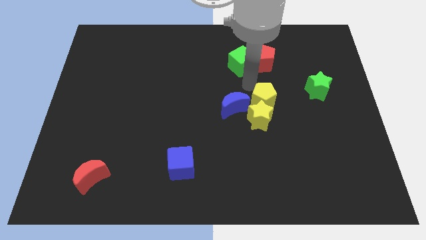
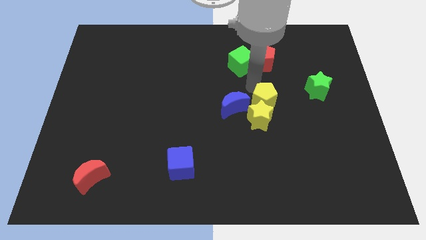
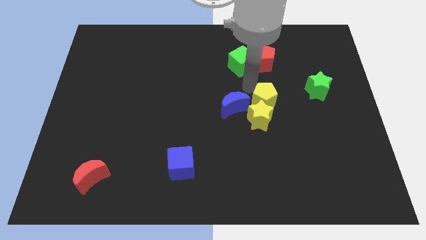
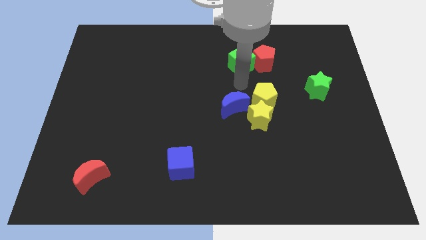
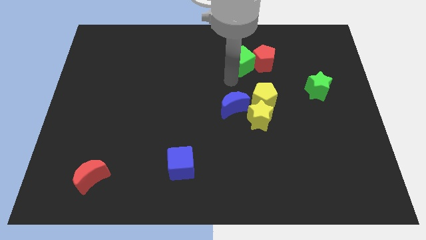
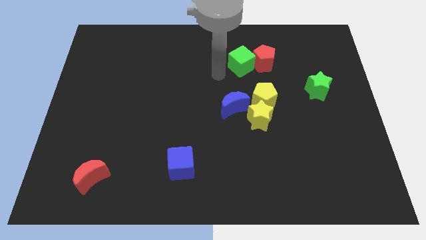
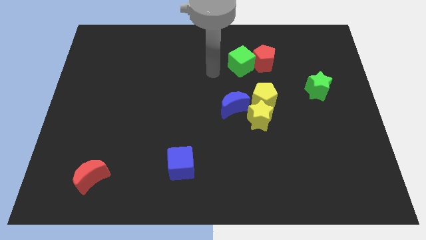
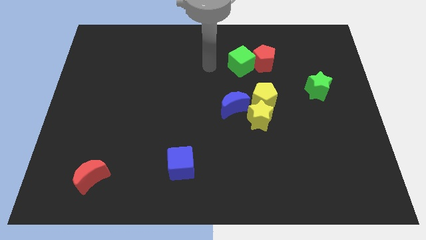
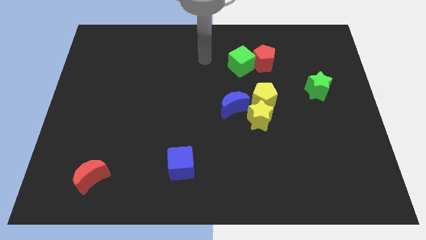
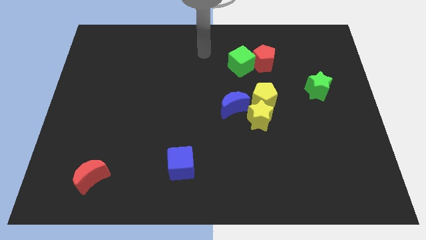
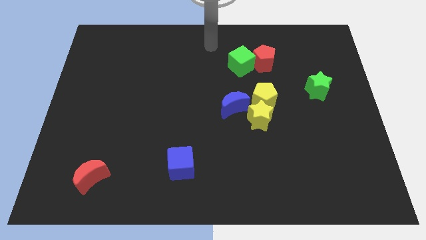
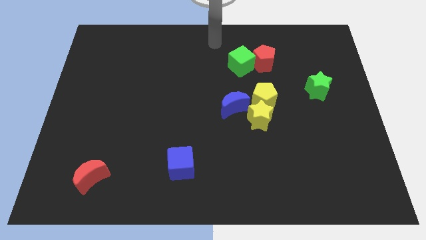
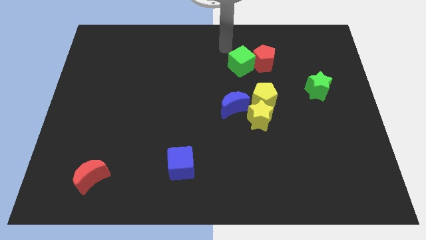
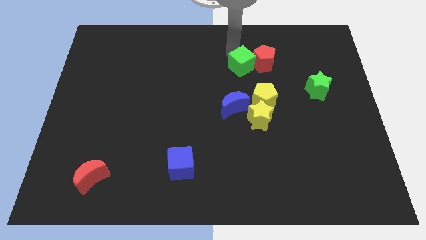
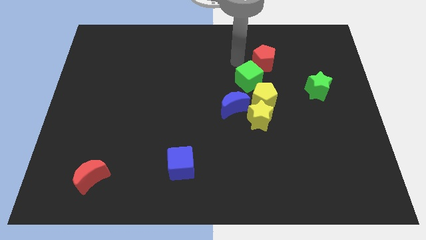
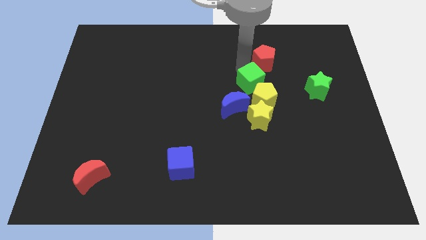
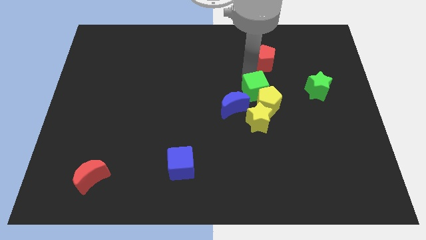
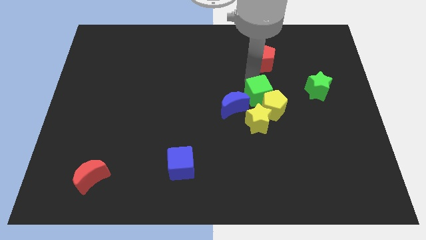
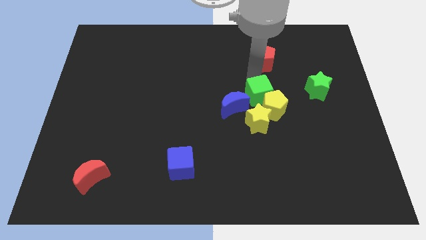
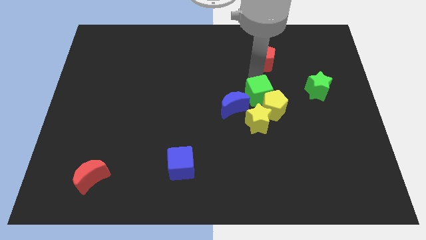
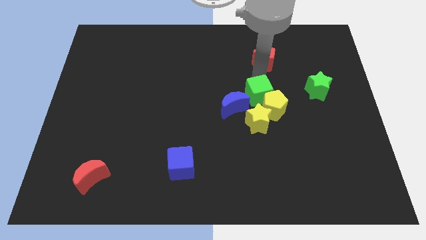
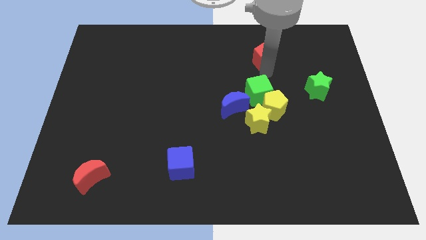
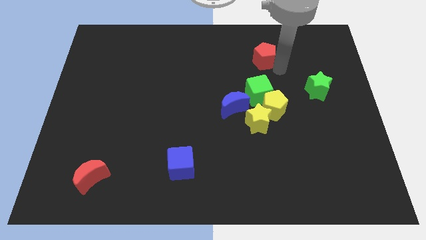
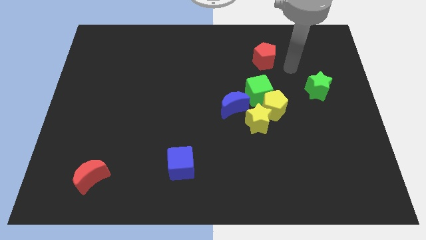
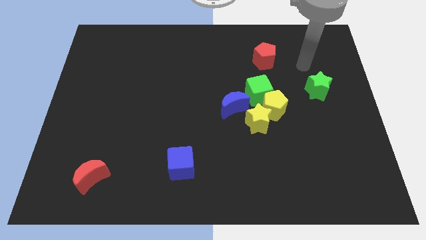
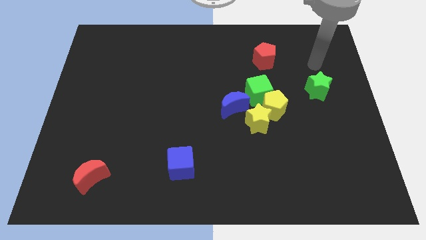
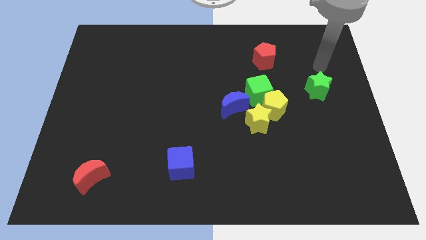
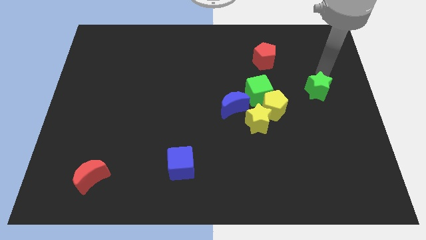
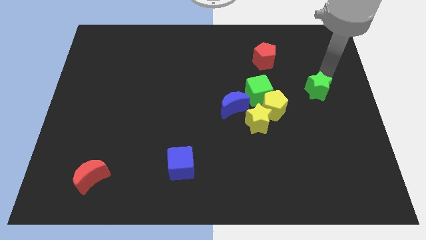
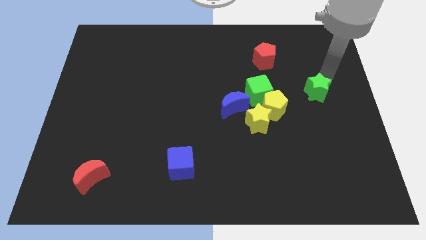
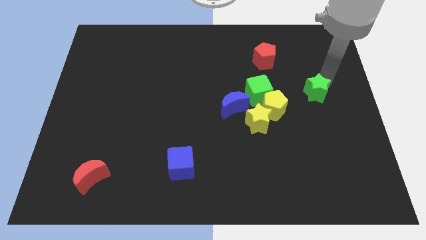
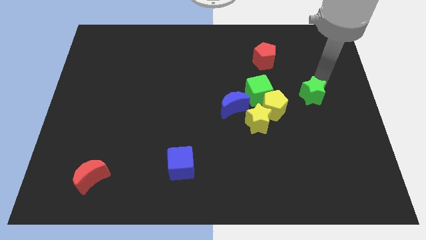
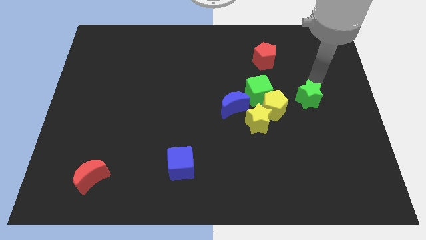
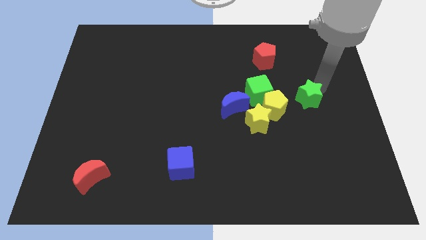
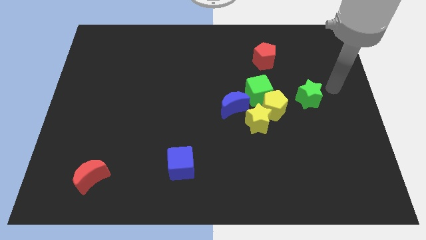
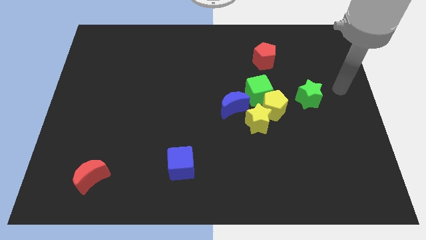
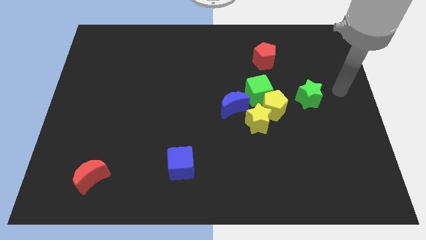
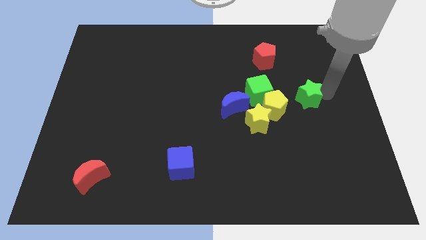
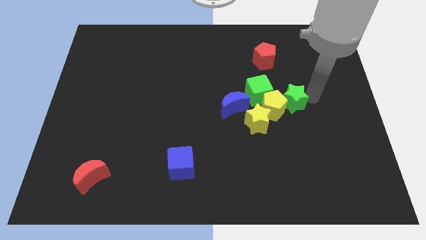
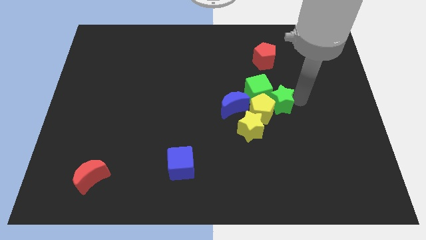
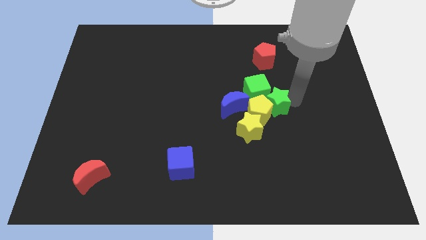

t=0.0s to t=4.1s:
move the green blocks into the yellow blocks

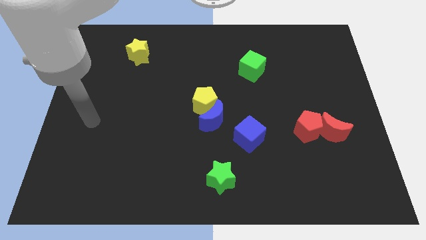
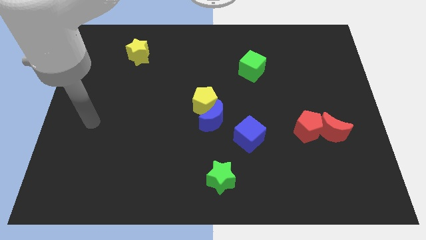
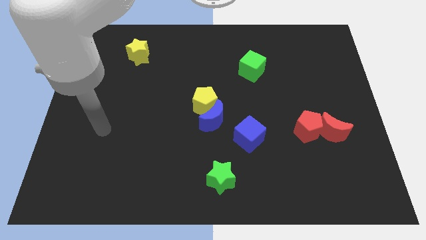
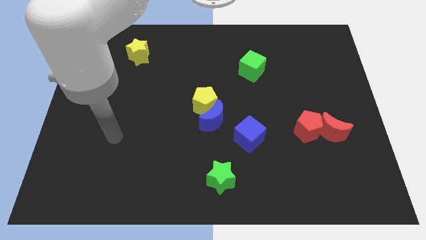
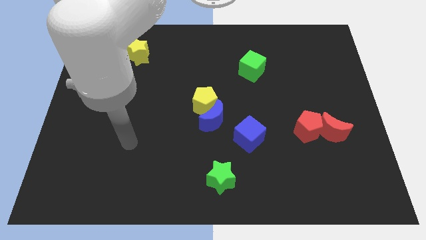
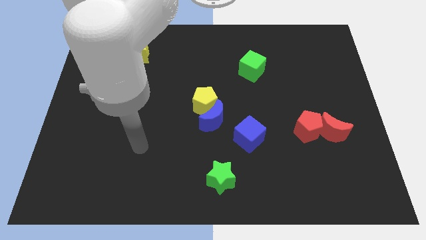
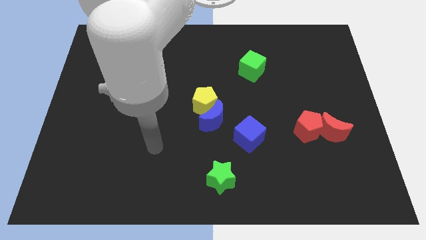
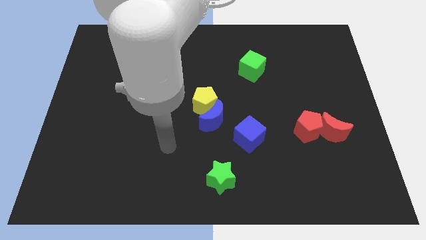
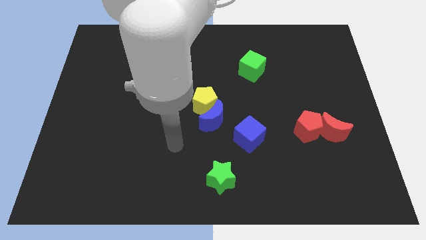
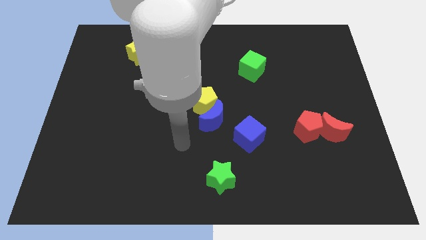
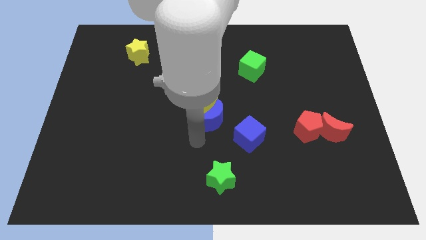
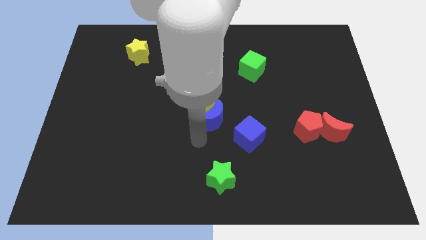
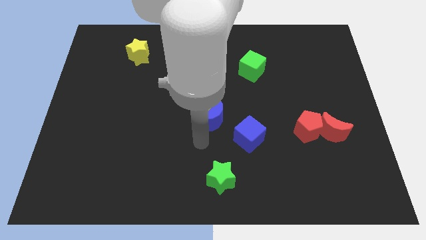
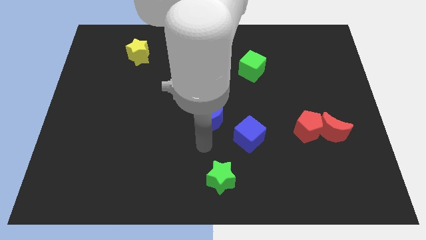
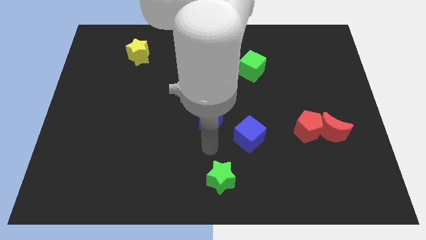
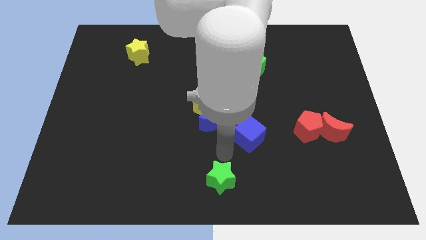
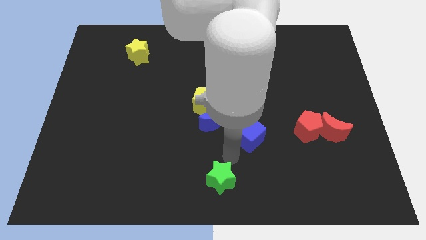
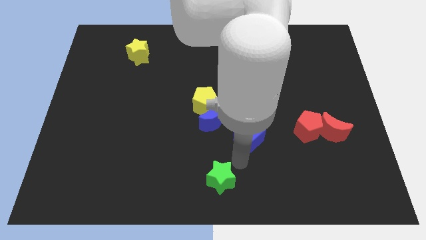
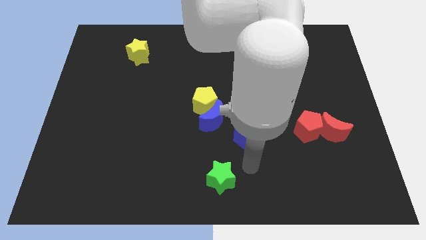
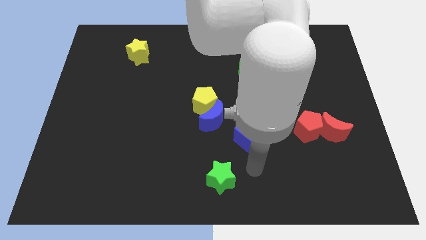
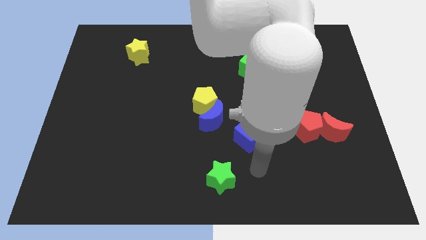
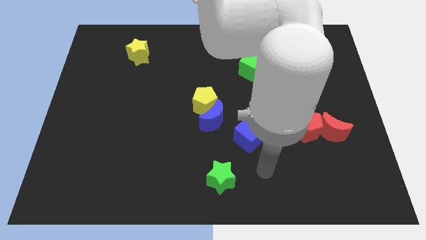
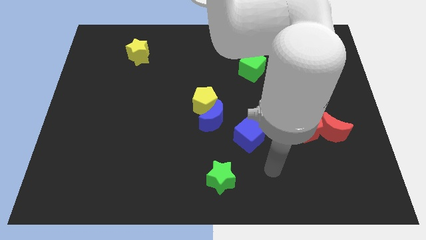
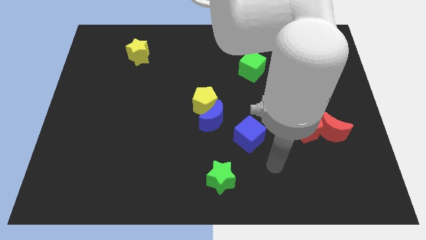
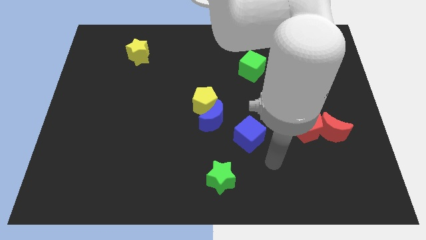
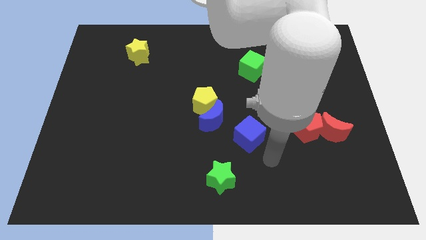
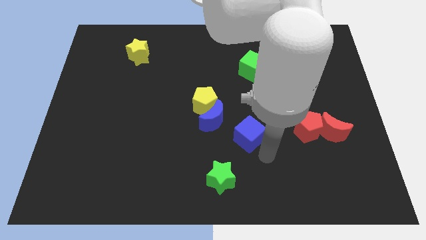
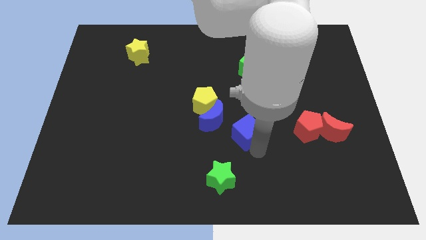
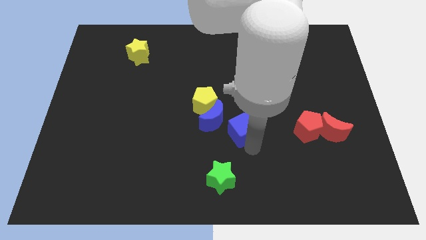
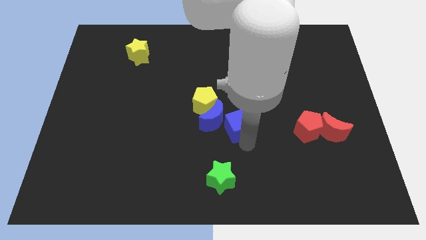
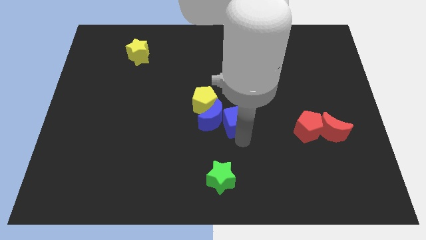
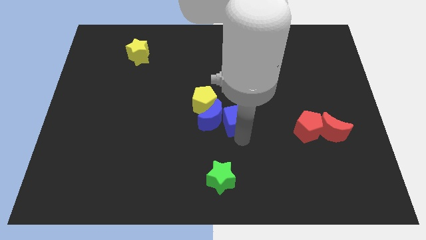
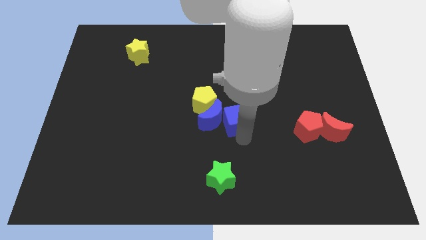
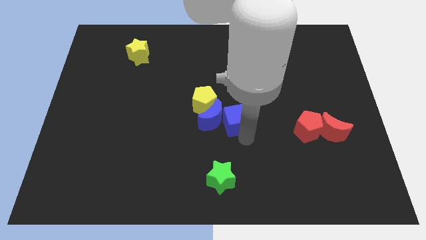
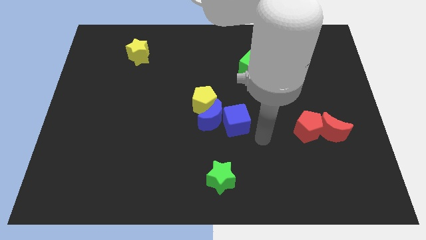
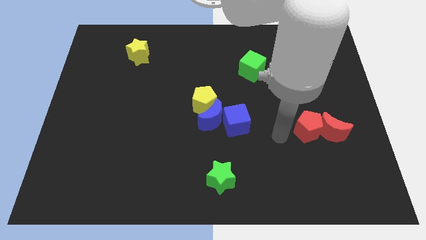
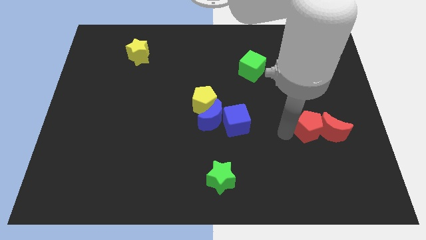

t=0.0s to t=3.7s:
push the blue cube into the blue moon

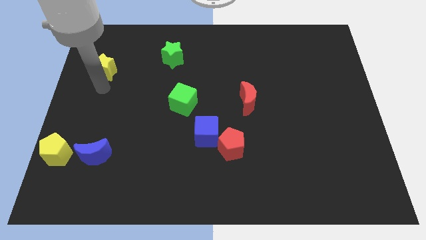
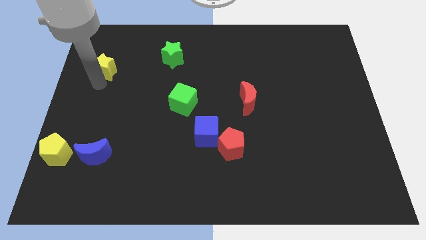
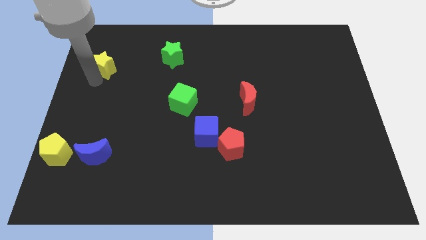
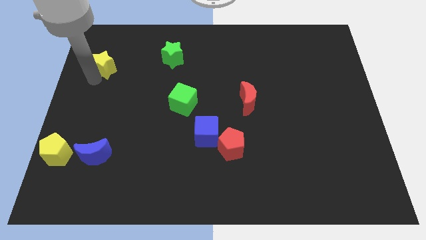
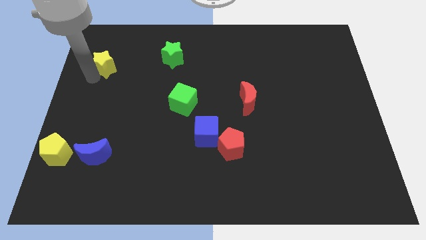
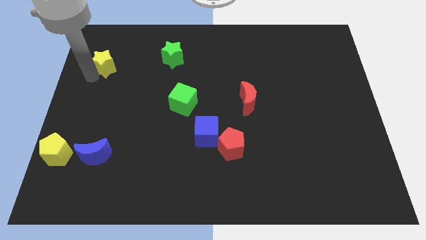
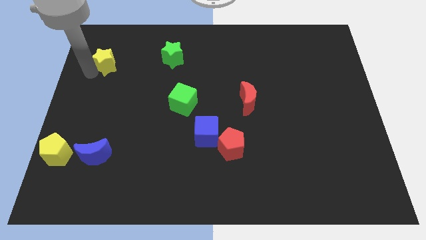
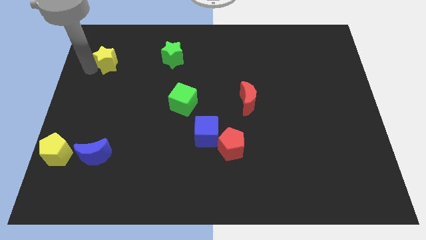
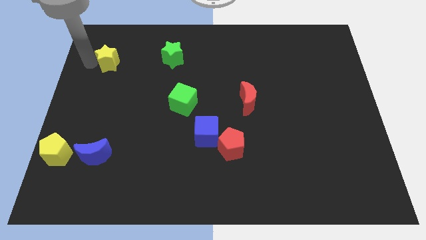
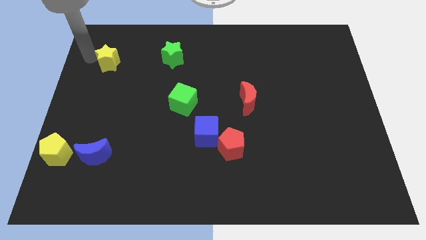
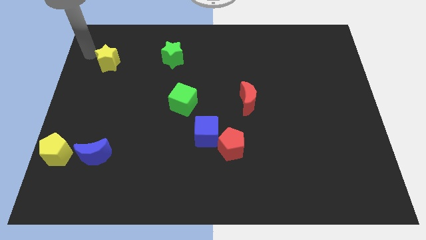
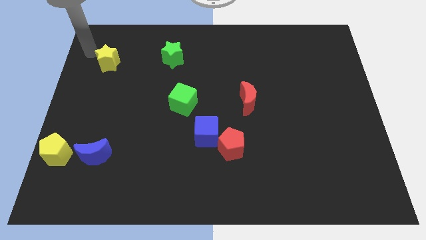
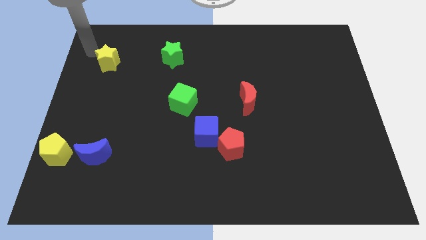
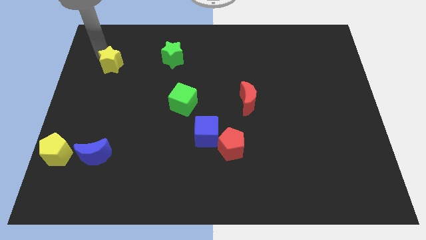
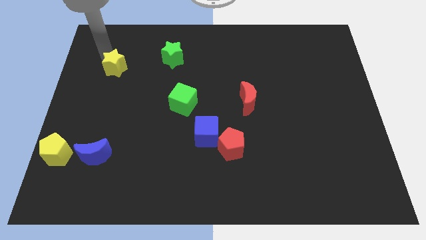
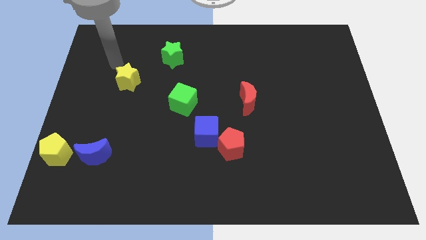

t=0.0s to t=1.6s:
push the yellow star diagonally to the bottom left og the green star
